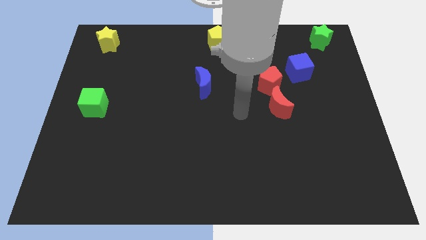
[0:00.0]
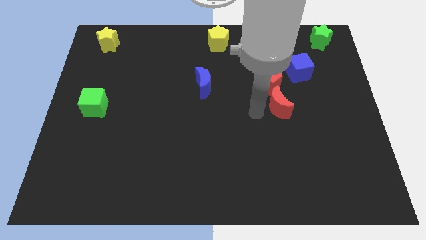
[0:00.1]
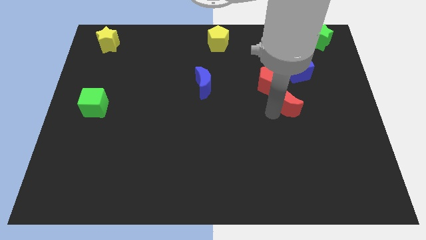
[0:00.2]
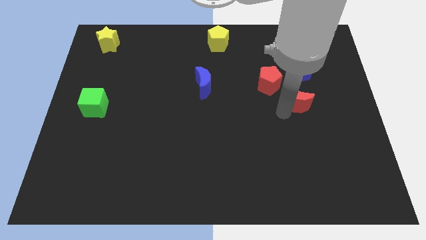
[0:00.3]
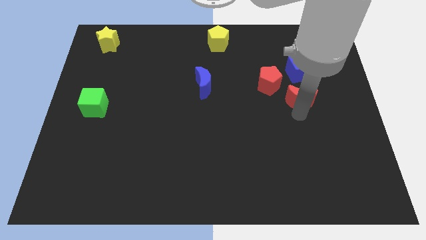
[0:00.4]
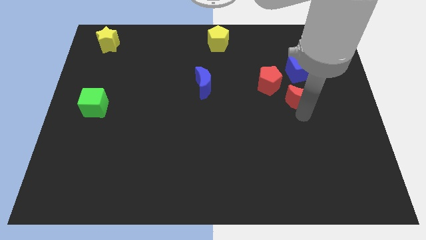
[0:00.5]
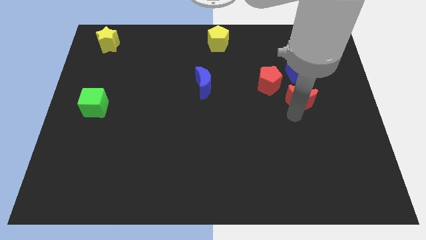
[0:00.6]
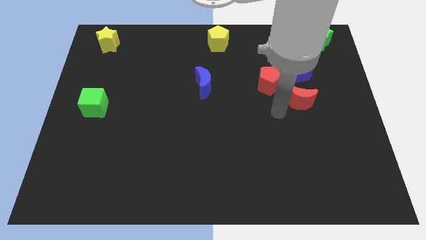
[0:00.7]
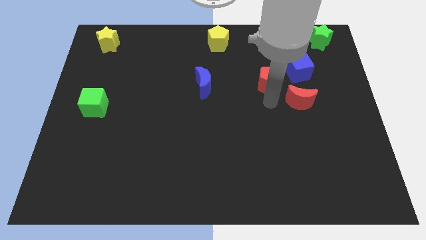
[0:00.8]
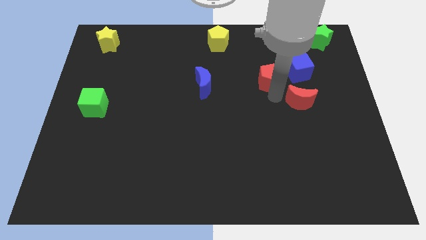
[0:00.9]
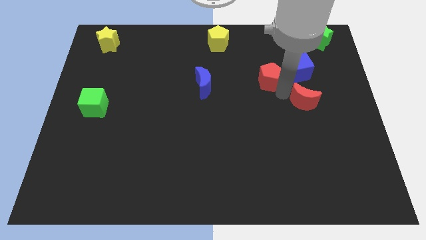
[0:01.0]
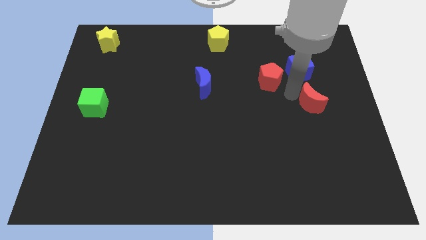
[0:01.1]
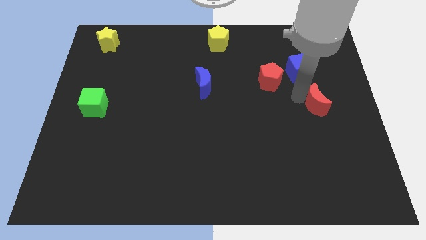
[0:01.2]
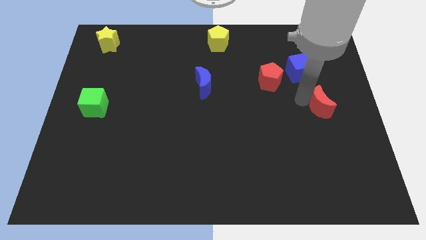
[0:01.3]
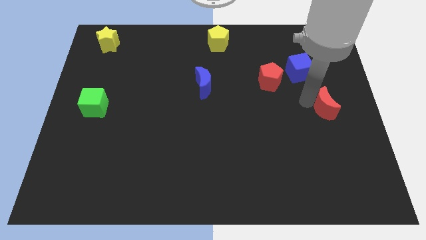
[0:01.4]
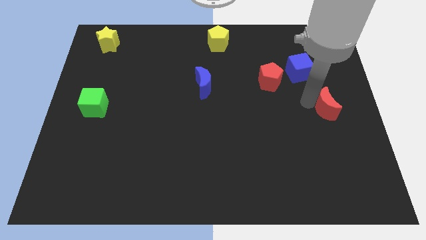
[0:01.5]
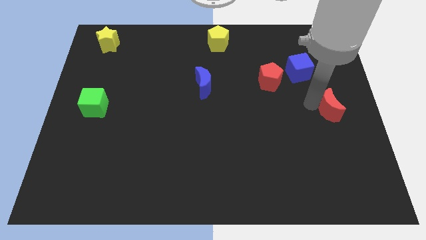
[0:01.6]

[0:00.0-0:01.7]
move red crescent slightly to the right

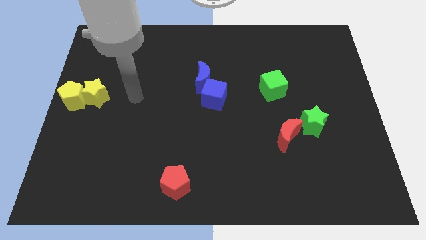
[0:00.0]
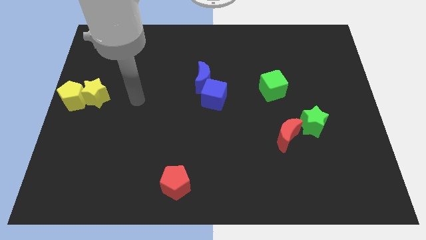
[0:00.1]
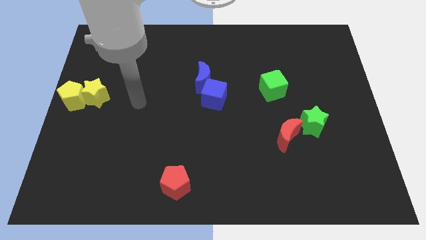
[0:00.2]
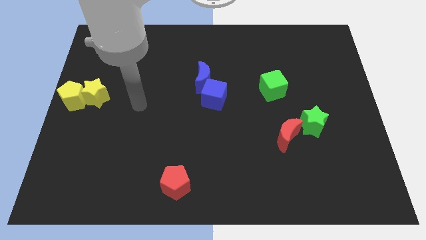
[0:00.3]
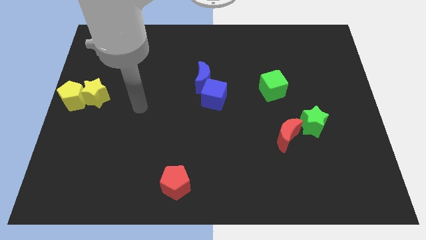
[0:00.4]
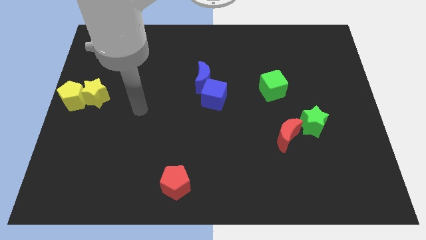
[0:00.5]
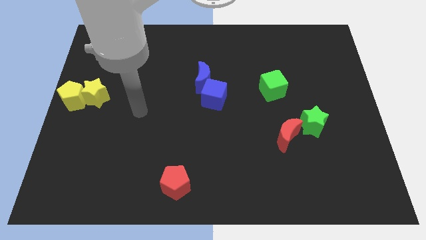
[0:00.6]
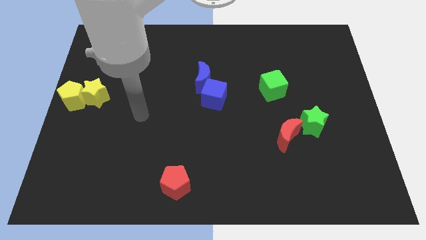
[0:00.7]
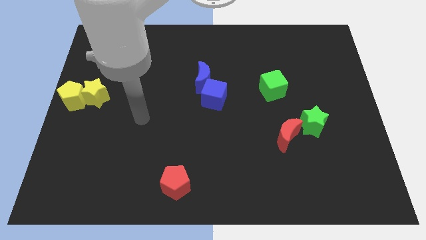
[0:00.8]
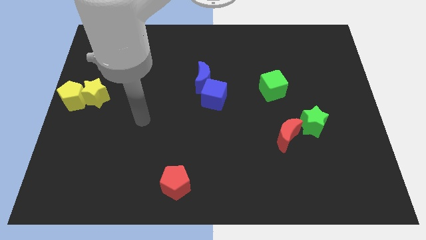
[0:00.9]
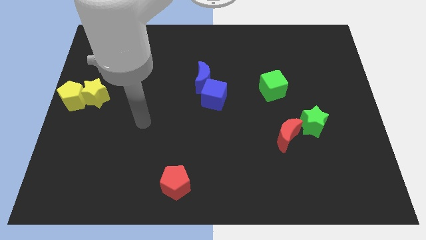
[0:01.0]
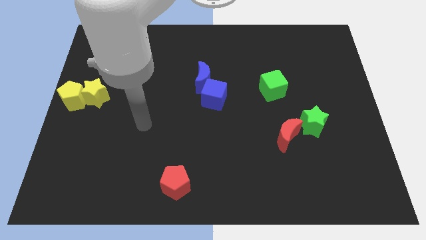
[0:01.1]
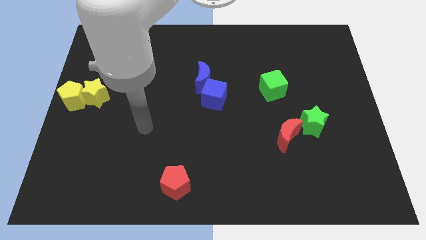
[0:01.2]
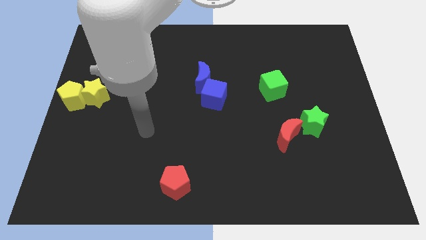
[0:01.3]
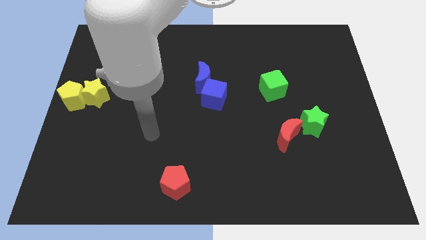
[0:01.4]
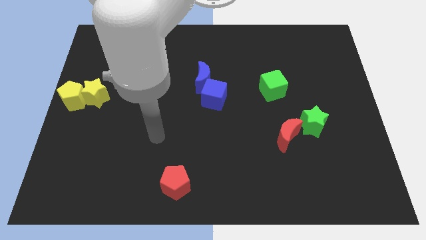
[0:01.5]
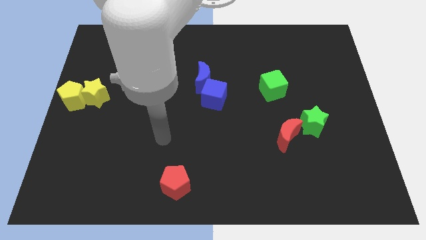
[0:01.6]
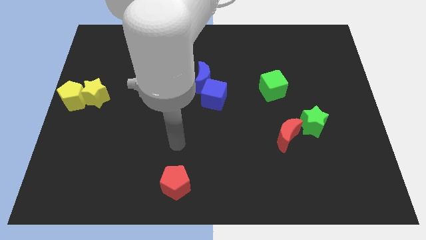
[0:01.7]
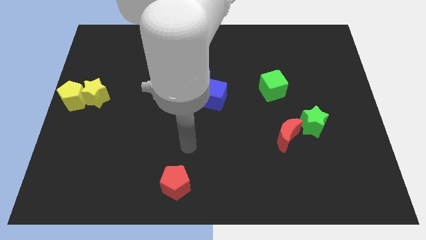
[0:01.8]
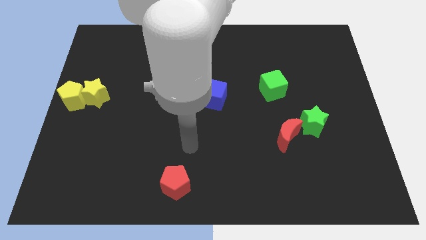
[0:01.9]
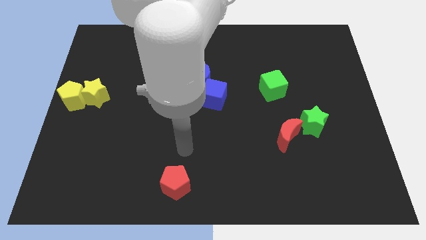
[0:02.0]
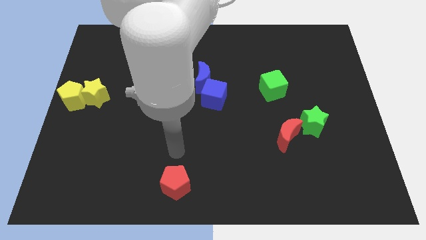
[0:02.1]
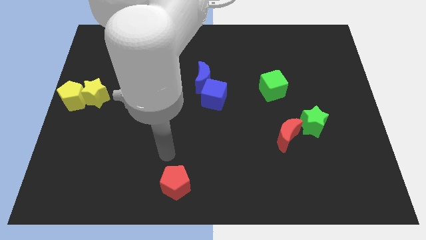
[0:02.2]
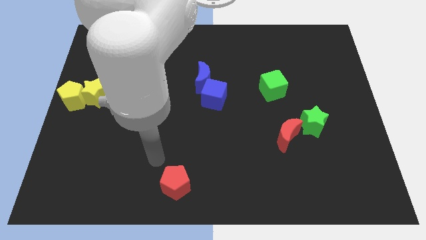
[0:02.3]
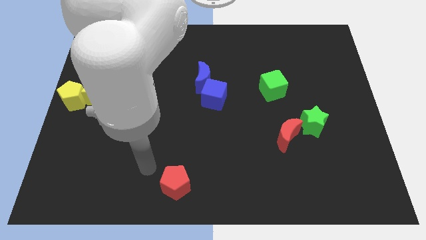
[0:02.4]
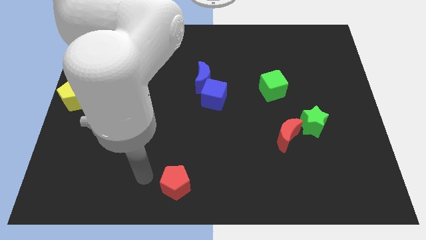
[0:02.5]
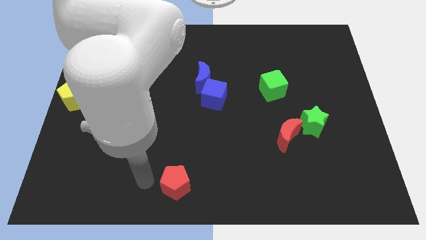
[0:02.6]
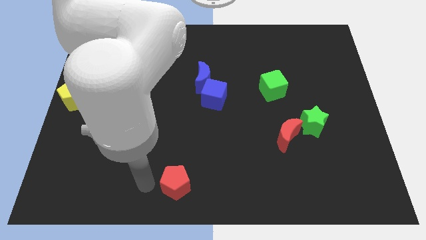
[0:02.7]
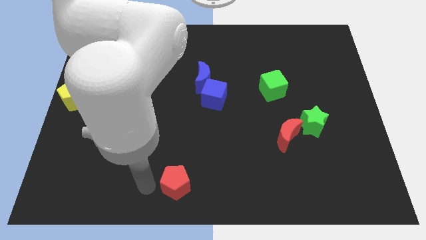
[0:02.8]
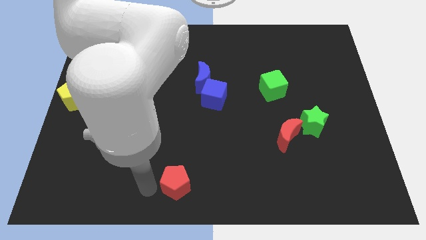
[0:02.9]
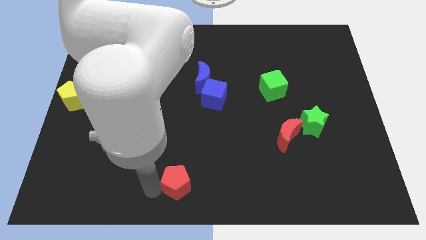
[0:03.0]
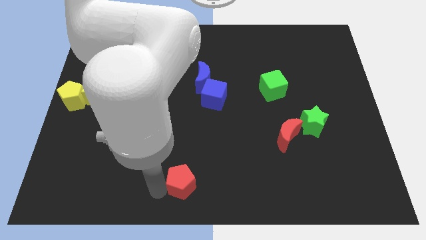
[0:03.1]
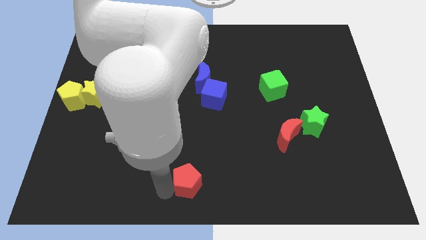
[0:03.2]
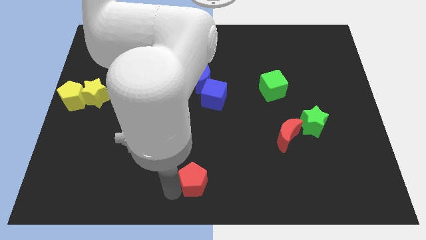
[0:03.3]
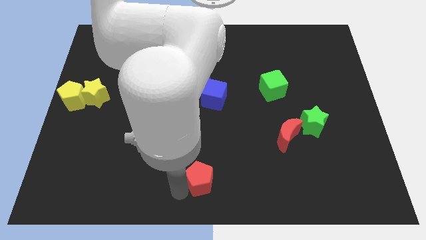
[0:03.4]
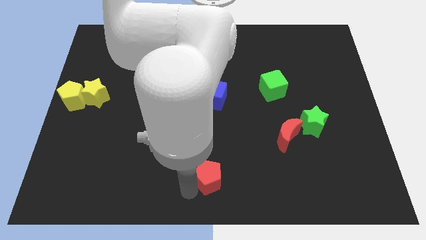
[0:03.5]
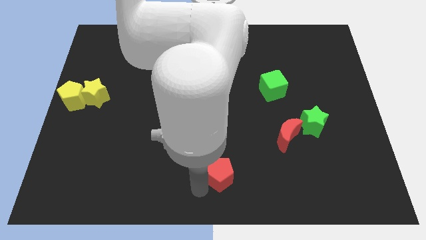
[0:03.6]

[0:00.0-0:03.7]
place the red pentagon at the bottom center of the board

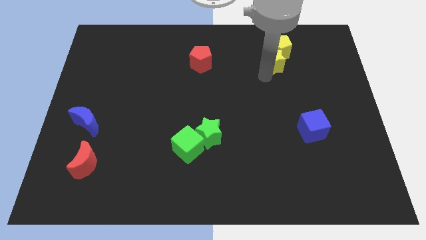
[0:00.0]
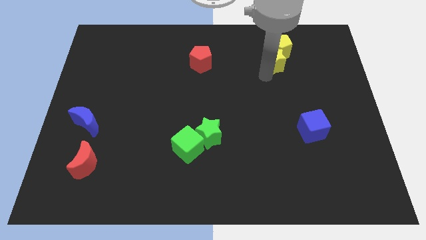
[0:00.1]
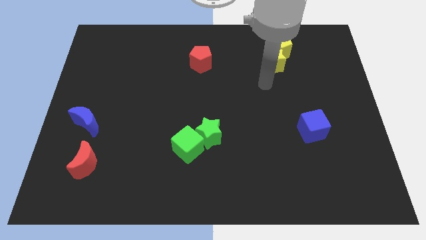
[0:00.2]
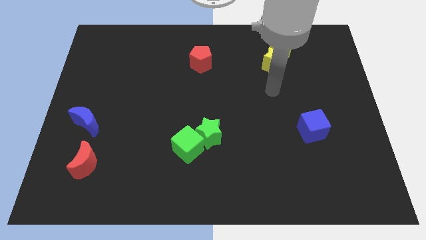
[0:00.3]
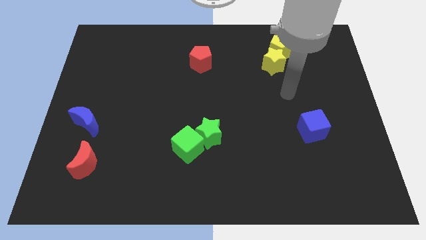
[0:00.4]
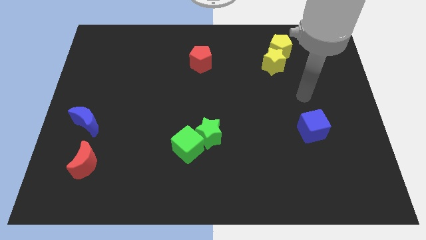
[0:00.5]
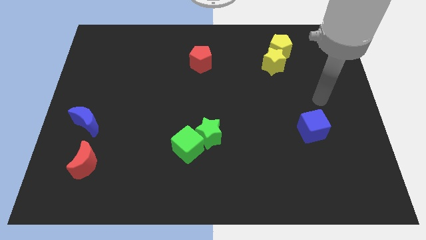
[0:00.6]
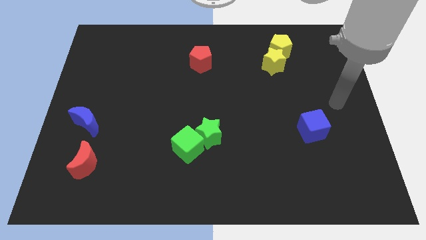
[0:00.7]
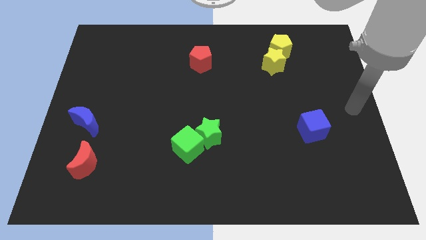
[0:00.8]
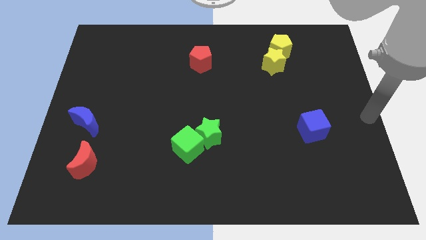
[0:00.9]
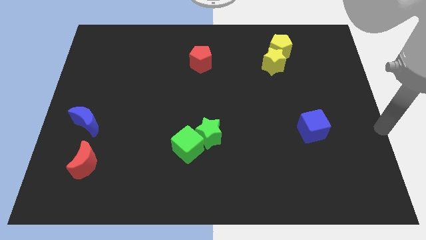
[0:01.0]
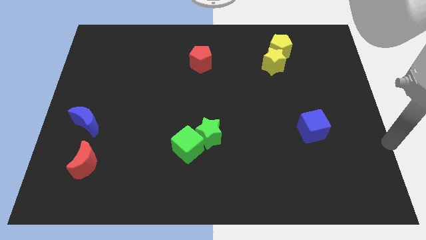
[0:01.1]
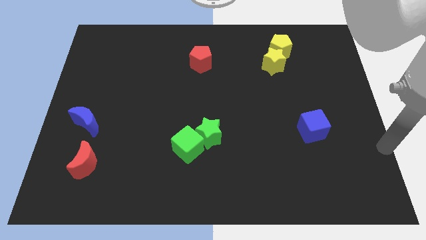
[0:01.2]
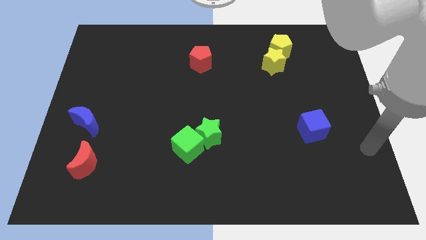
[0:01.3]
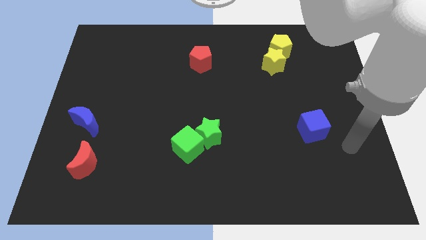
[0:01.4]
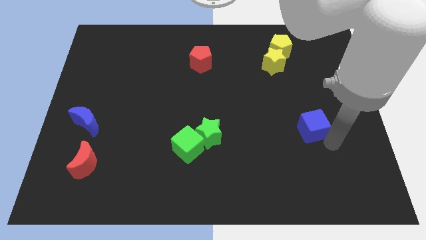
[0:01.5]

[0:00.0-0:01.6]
point your arm below blue cube

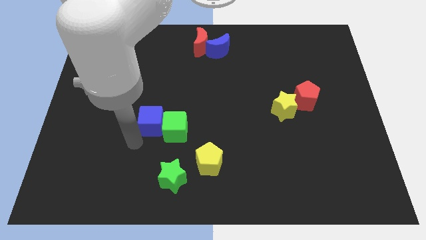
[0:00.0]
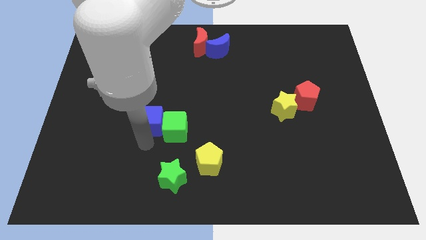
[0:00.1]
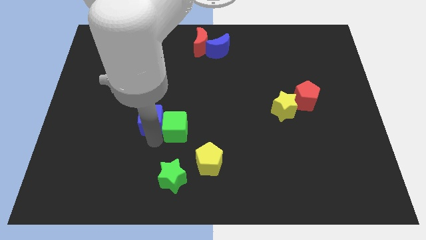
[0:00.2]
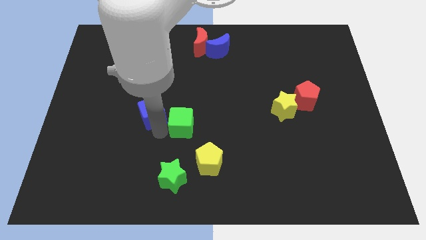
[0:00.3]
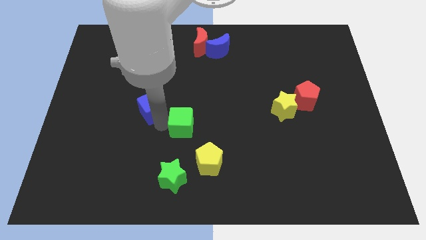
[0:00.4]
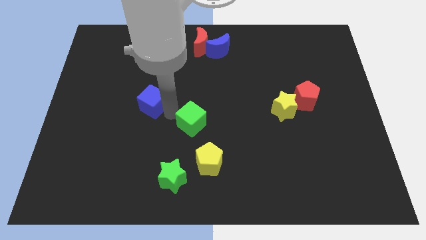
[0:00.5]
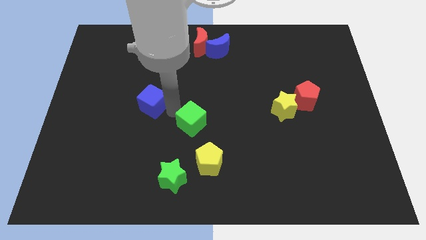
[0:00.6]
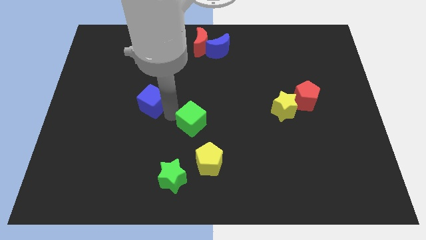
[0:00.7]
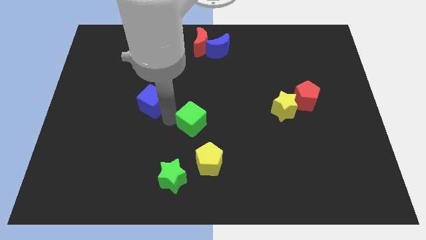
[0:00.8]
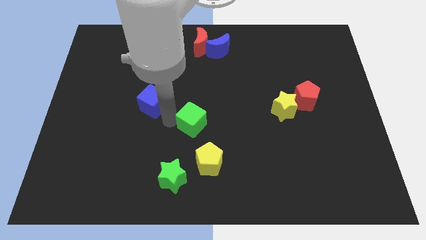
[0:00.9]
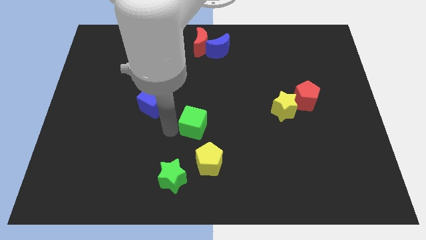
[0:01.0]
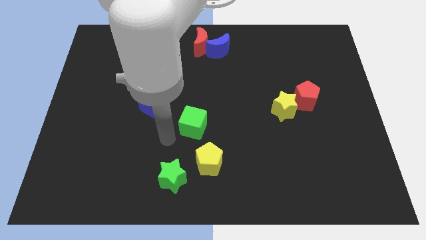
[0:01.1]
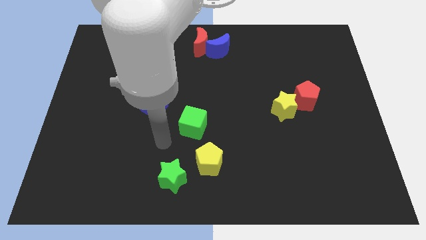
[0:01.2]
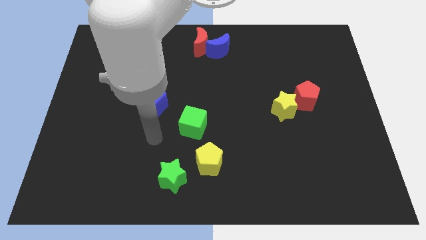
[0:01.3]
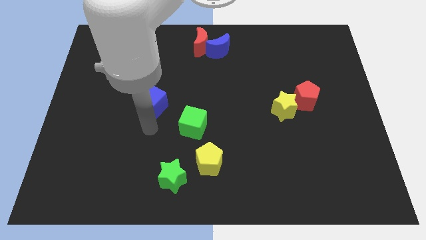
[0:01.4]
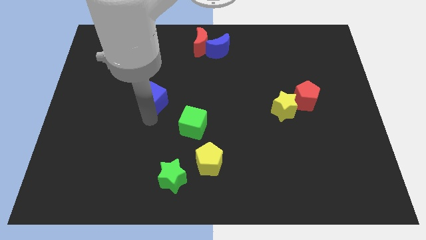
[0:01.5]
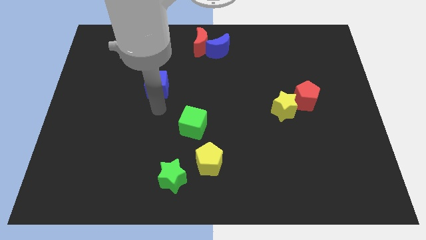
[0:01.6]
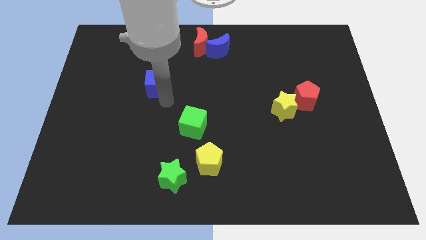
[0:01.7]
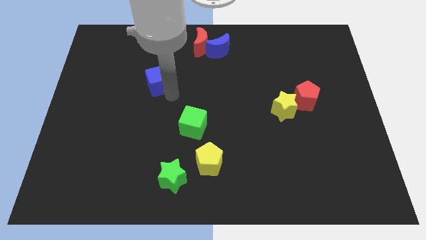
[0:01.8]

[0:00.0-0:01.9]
move the green cube apart from the green cube
